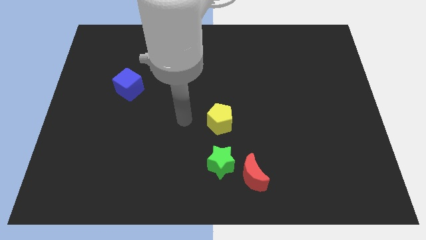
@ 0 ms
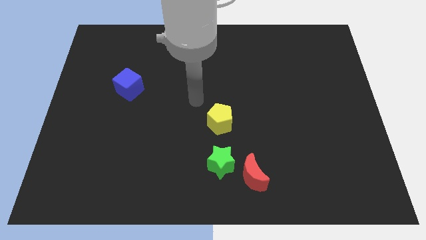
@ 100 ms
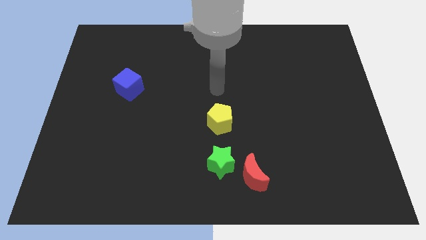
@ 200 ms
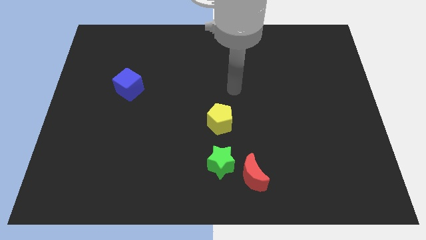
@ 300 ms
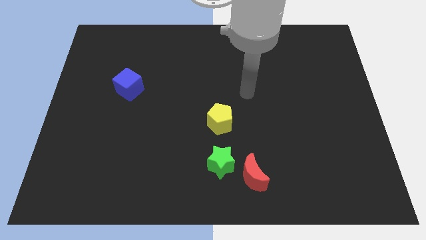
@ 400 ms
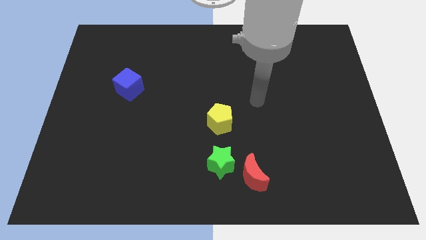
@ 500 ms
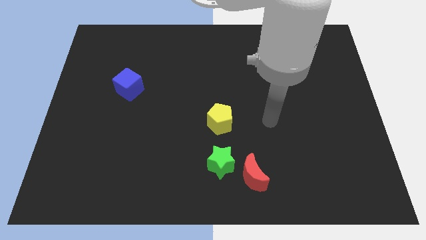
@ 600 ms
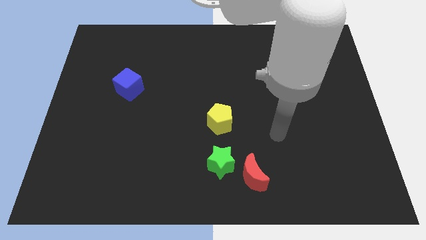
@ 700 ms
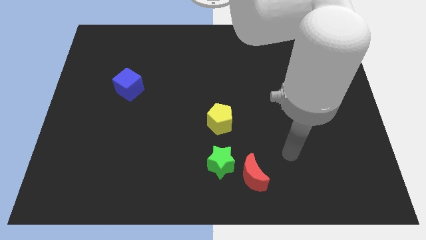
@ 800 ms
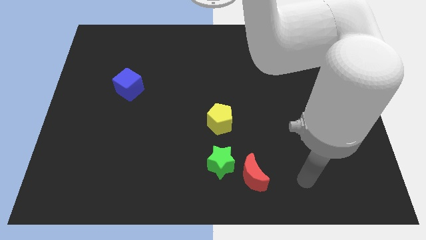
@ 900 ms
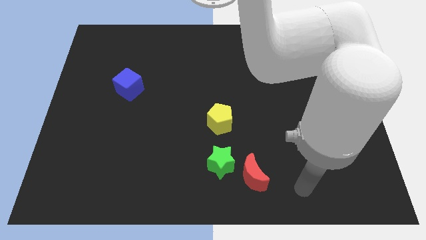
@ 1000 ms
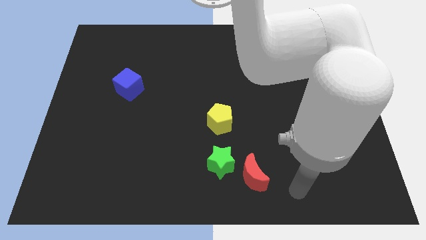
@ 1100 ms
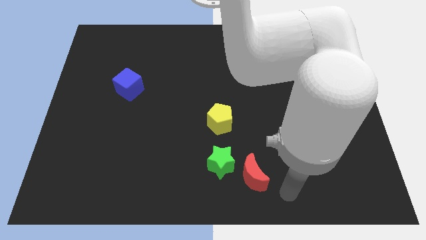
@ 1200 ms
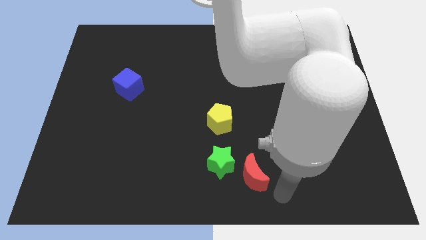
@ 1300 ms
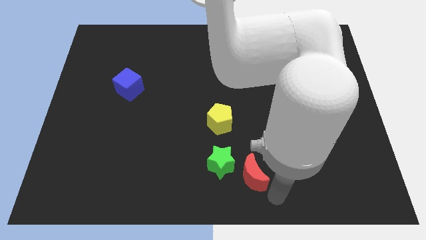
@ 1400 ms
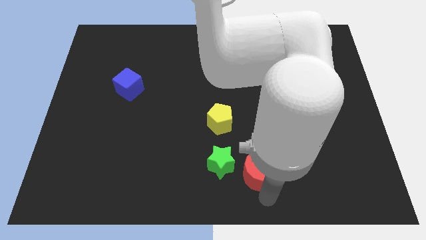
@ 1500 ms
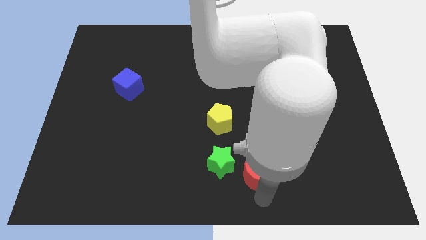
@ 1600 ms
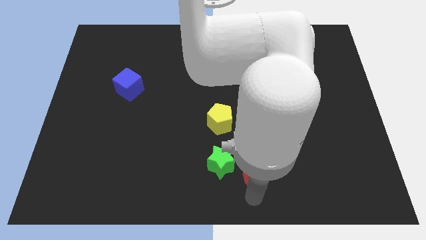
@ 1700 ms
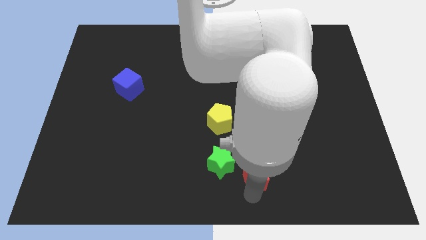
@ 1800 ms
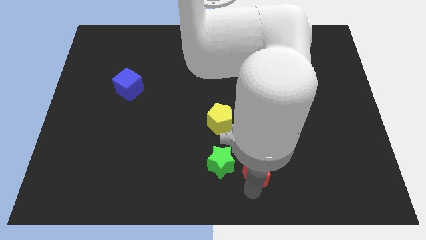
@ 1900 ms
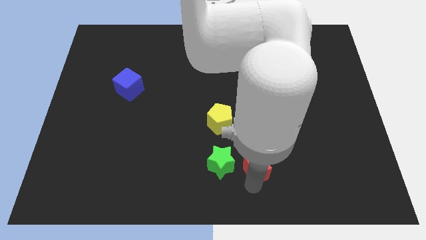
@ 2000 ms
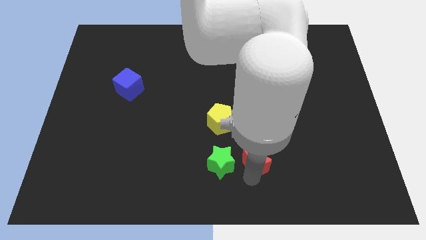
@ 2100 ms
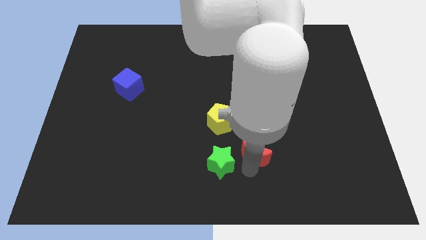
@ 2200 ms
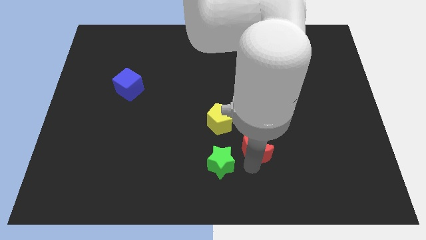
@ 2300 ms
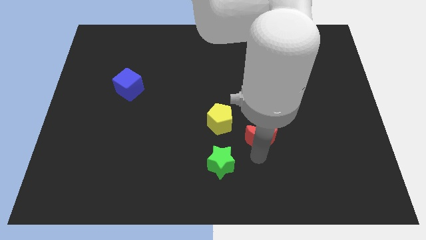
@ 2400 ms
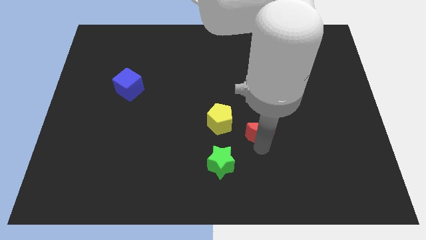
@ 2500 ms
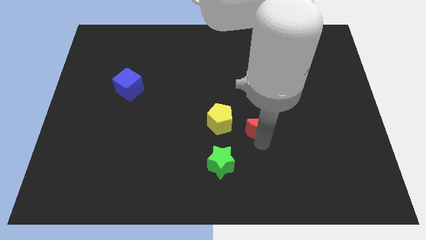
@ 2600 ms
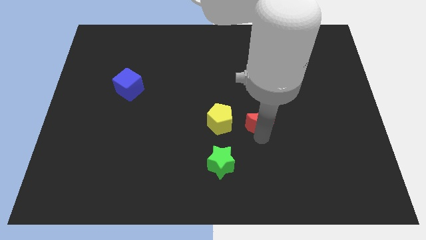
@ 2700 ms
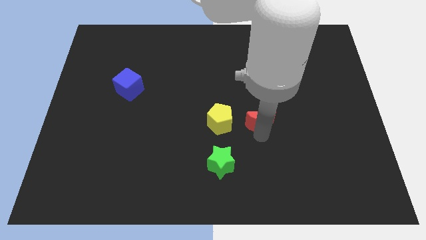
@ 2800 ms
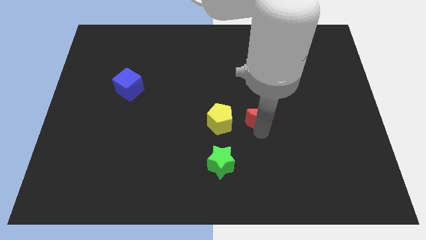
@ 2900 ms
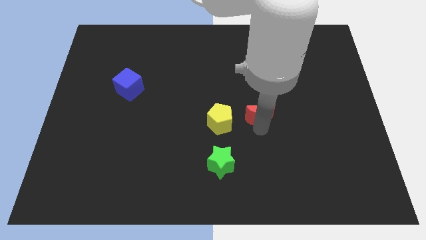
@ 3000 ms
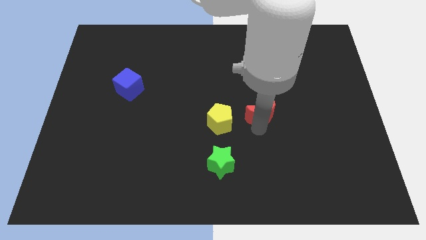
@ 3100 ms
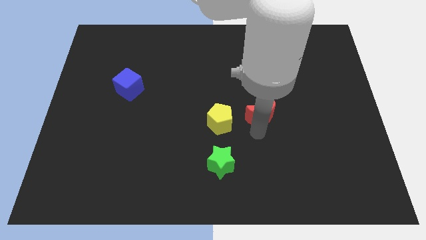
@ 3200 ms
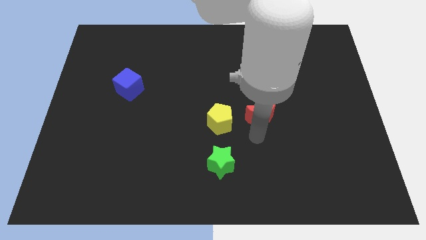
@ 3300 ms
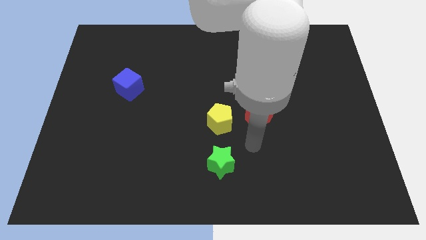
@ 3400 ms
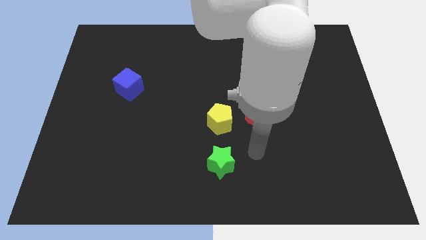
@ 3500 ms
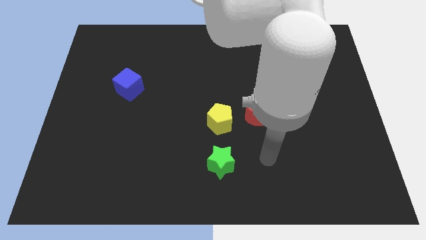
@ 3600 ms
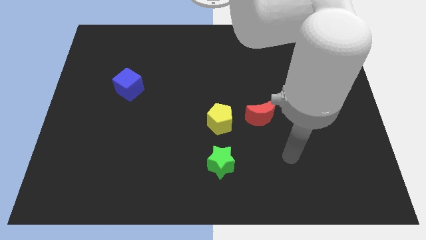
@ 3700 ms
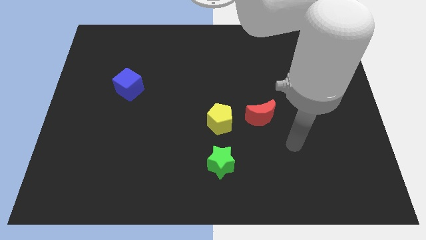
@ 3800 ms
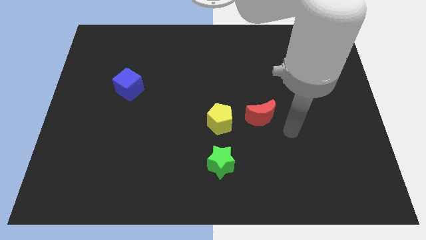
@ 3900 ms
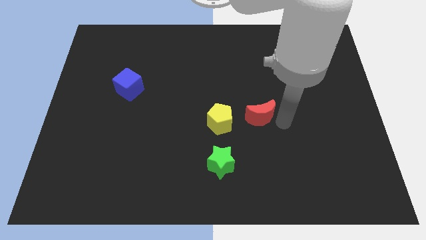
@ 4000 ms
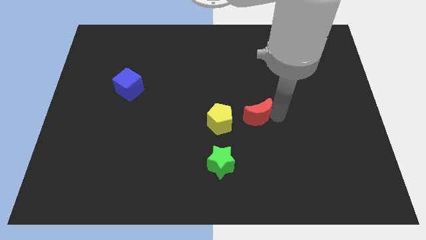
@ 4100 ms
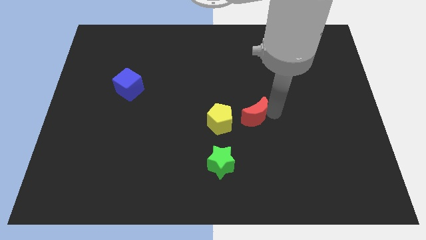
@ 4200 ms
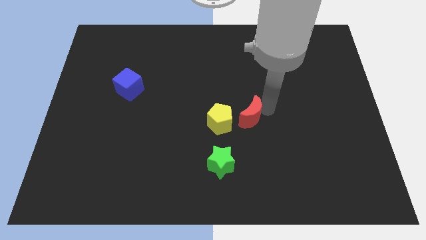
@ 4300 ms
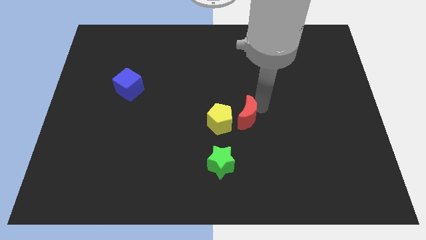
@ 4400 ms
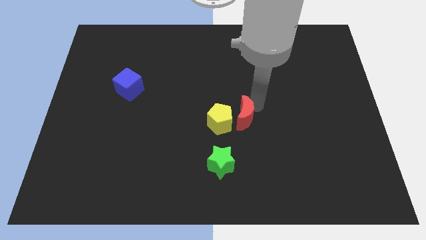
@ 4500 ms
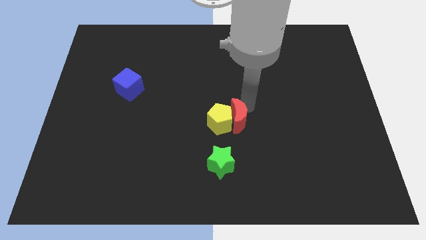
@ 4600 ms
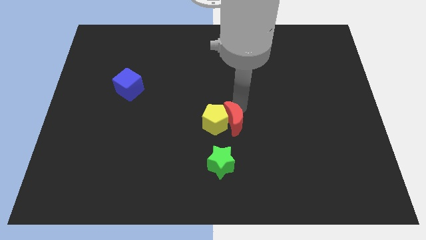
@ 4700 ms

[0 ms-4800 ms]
push the moon towards the yellow pentagon

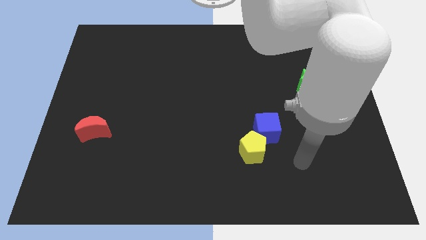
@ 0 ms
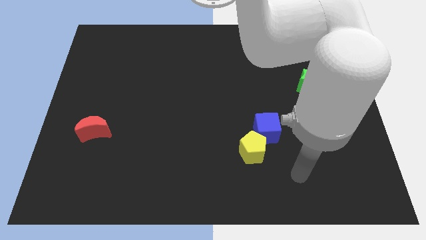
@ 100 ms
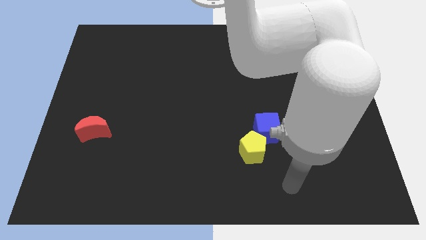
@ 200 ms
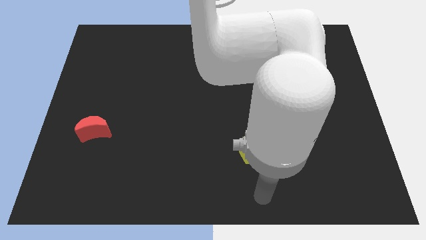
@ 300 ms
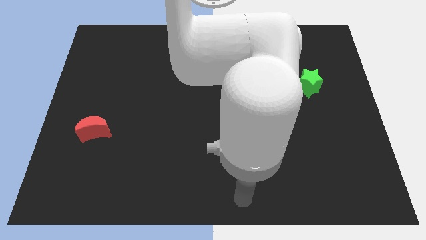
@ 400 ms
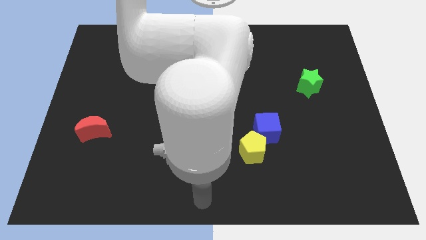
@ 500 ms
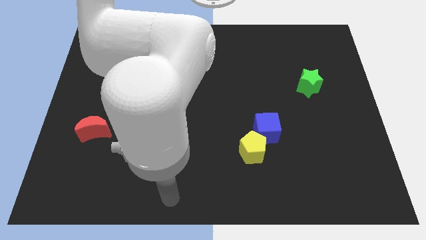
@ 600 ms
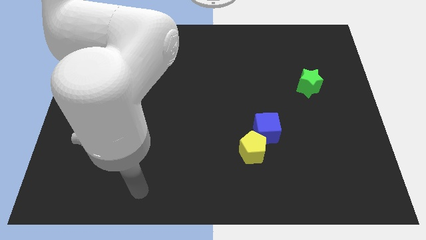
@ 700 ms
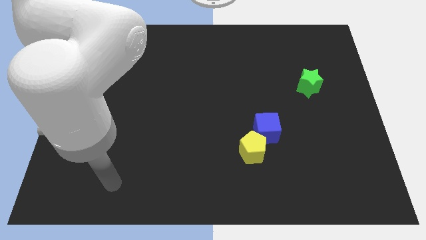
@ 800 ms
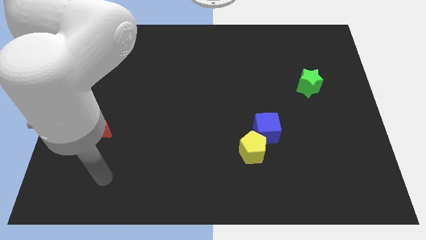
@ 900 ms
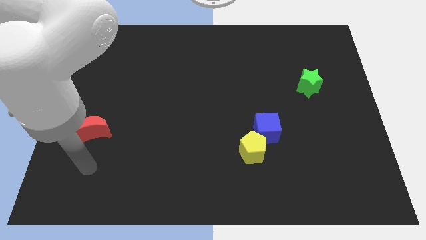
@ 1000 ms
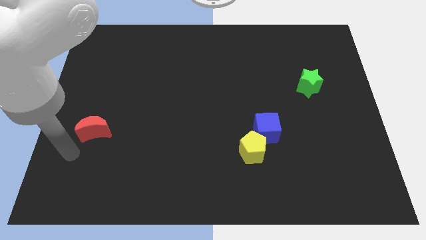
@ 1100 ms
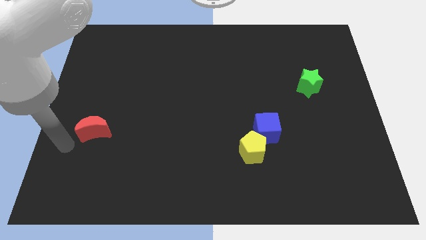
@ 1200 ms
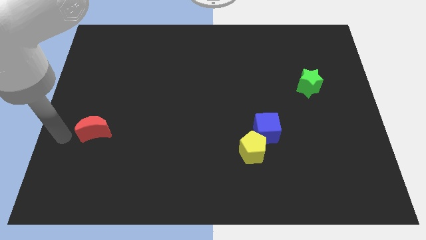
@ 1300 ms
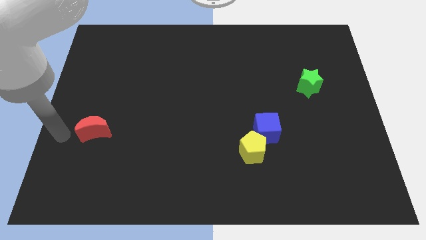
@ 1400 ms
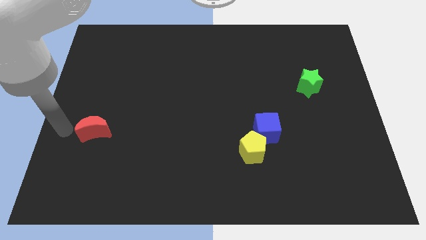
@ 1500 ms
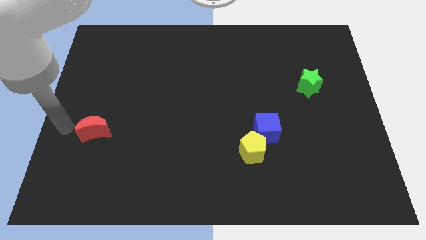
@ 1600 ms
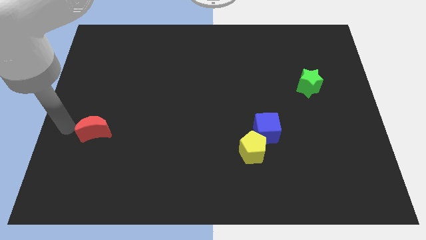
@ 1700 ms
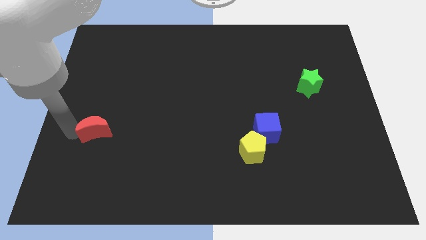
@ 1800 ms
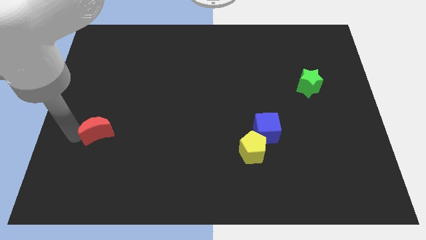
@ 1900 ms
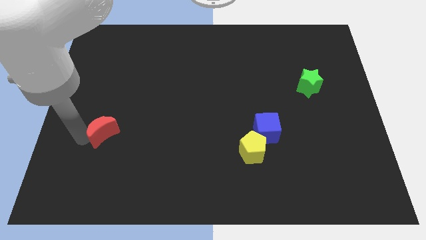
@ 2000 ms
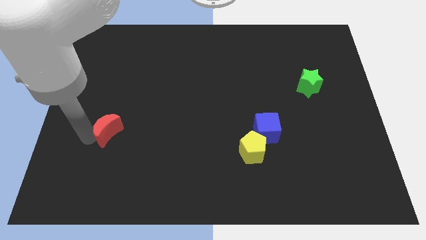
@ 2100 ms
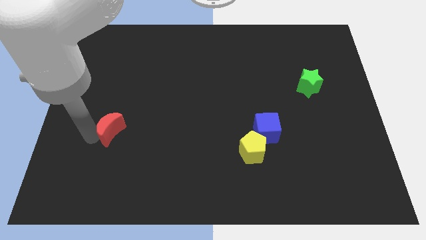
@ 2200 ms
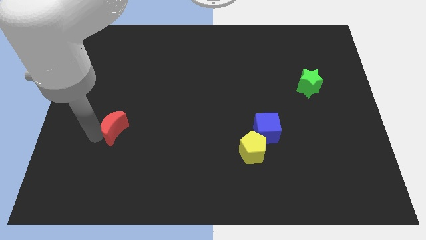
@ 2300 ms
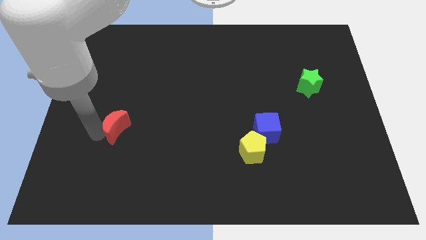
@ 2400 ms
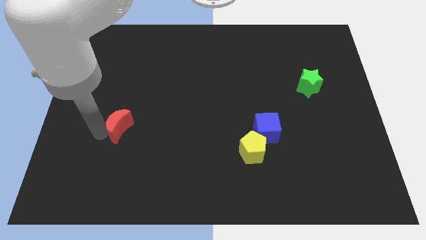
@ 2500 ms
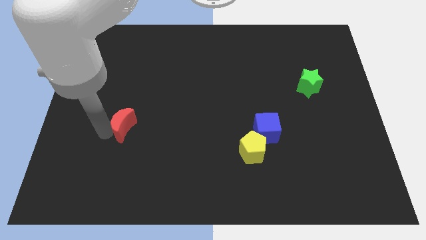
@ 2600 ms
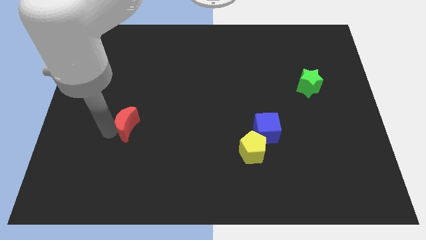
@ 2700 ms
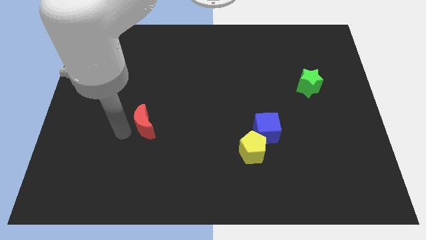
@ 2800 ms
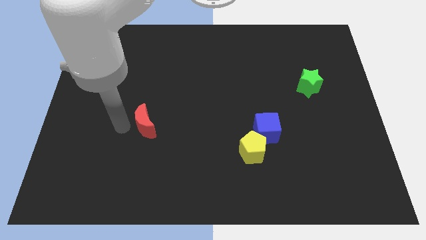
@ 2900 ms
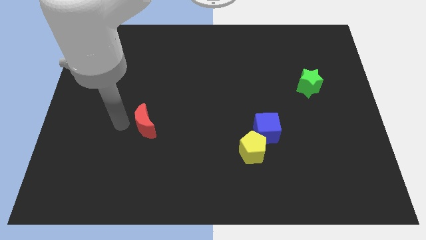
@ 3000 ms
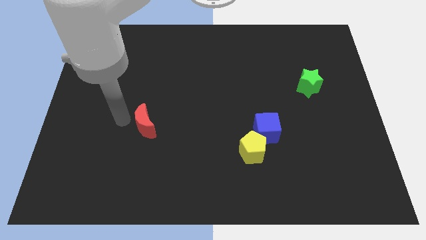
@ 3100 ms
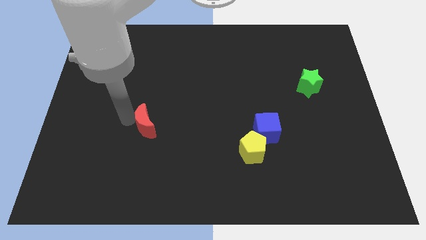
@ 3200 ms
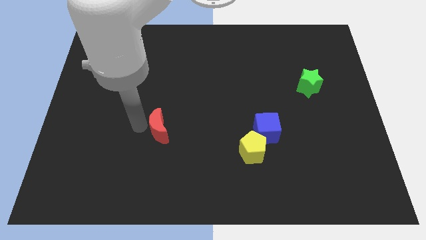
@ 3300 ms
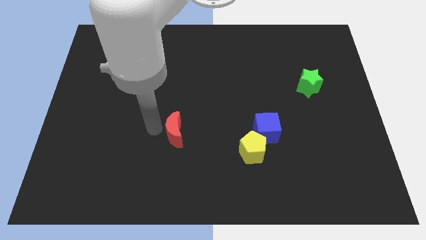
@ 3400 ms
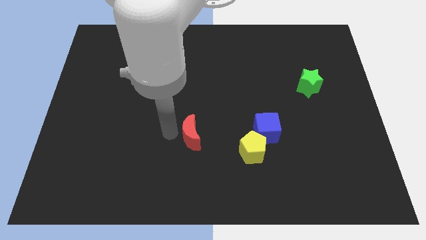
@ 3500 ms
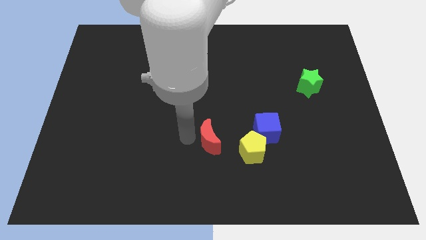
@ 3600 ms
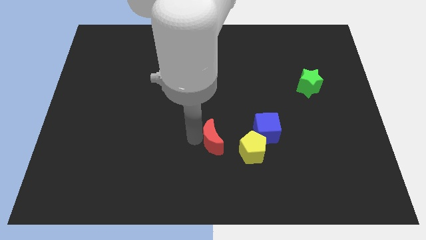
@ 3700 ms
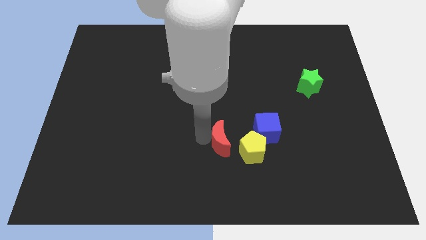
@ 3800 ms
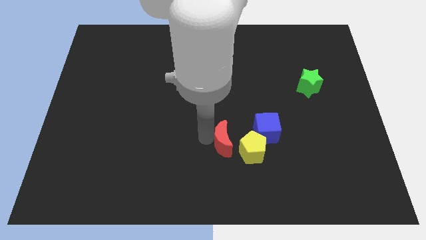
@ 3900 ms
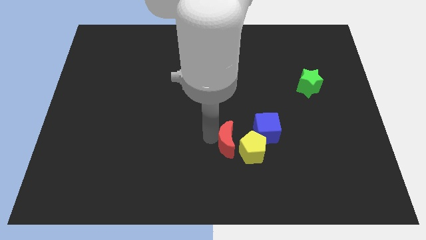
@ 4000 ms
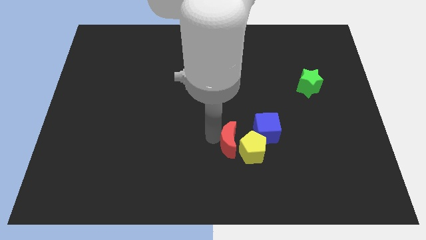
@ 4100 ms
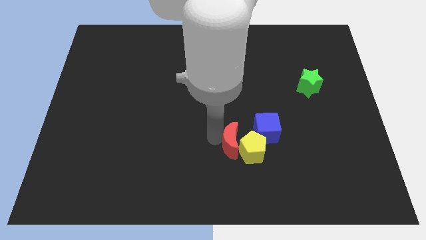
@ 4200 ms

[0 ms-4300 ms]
put the red block towards the yellow pentagon
